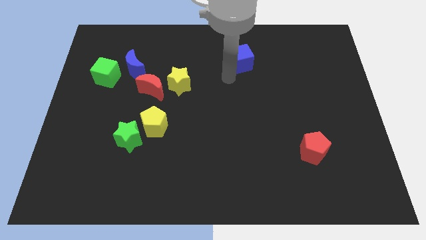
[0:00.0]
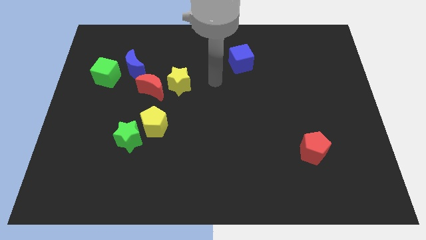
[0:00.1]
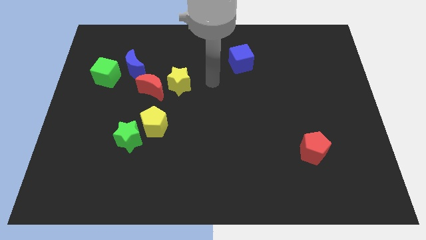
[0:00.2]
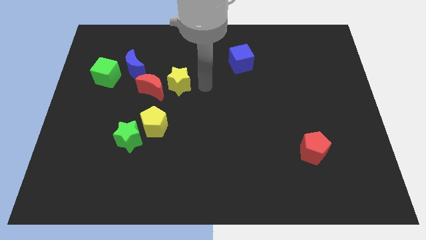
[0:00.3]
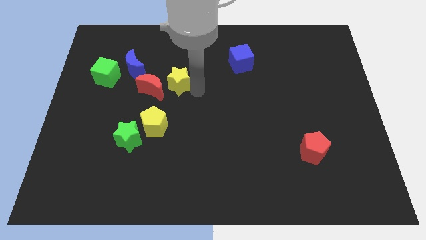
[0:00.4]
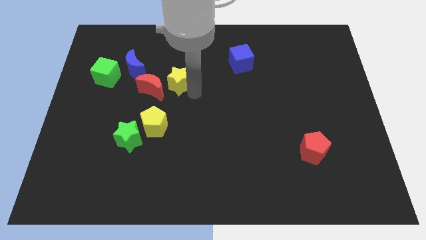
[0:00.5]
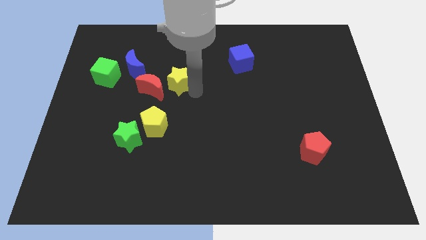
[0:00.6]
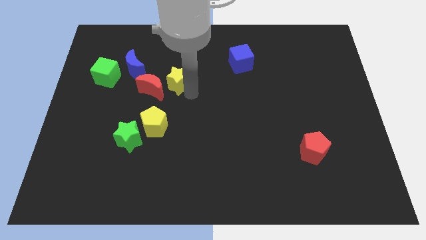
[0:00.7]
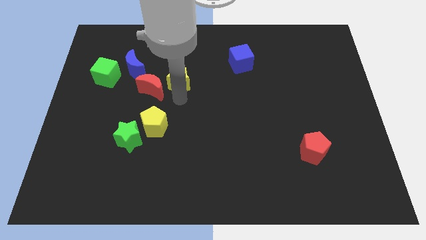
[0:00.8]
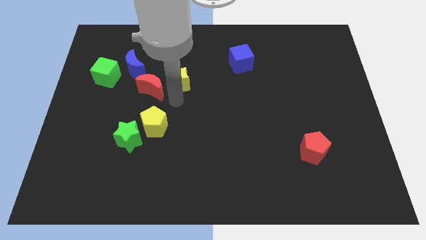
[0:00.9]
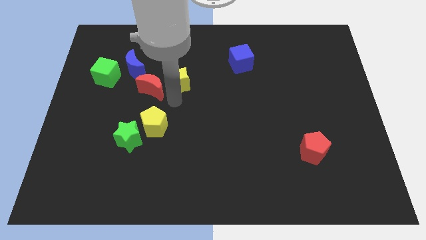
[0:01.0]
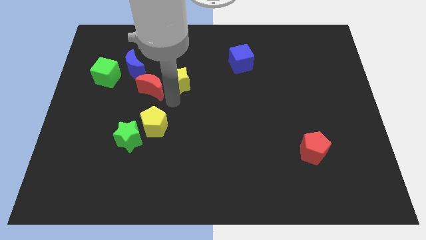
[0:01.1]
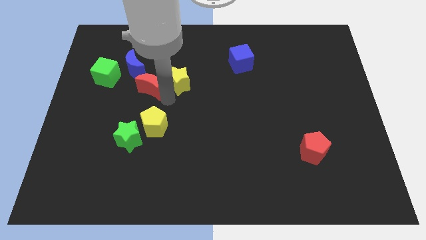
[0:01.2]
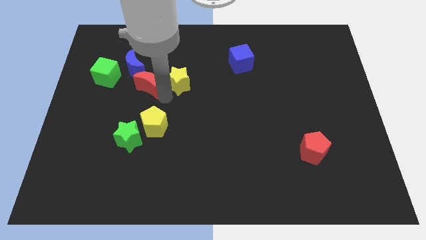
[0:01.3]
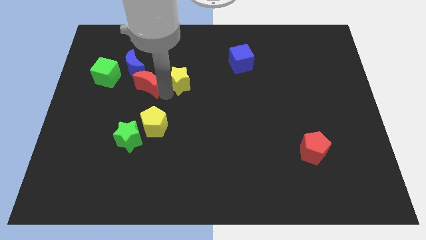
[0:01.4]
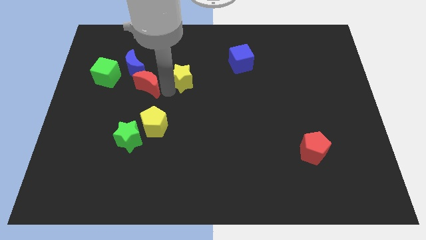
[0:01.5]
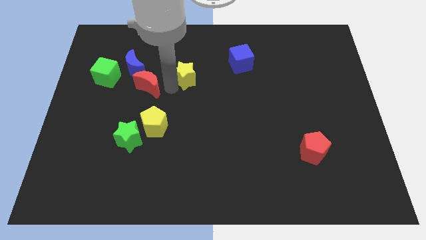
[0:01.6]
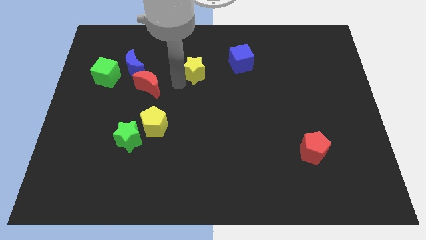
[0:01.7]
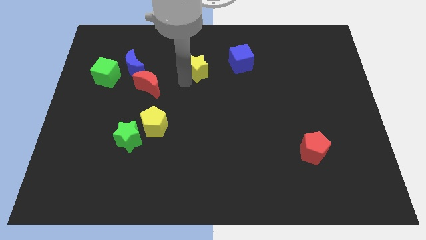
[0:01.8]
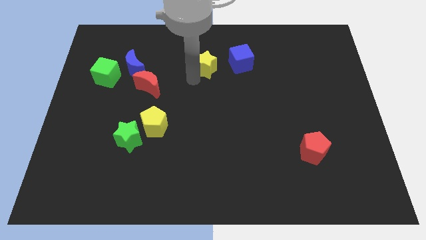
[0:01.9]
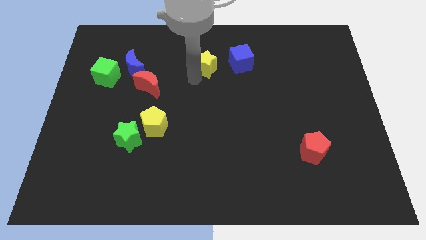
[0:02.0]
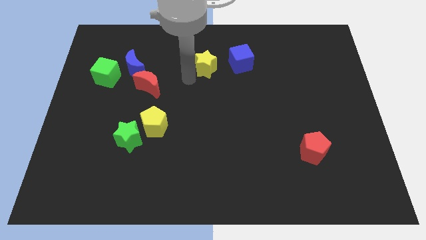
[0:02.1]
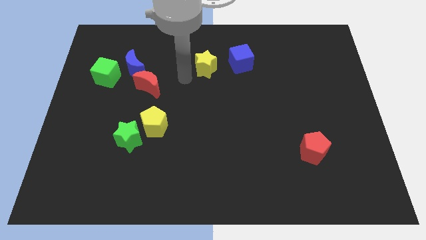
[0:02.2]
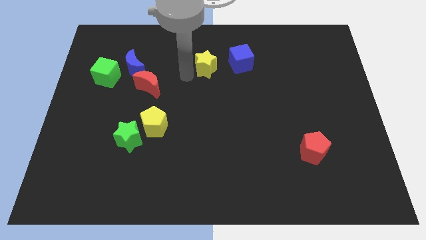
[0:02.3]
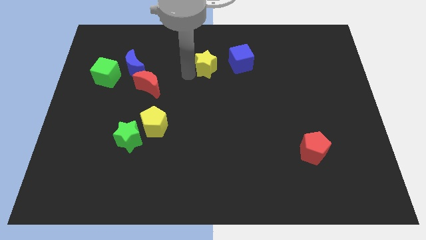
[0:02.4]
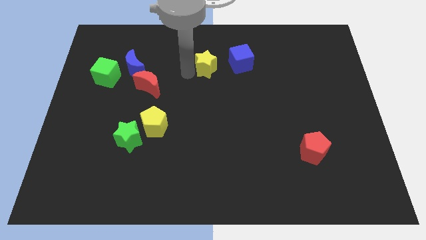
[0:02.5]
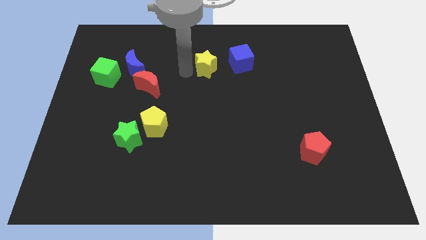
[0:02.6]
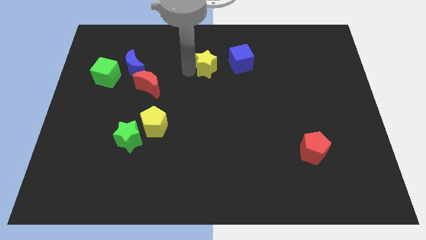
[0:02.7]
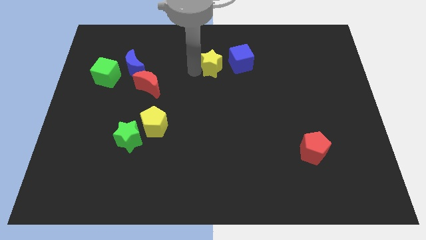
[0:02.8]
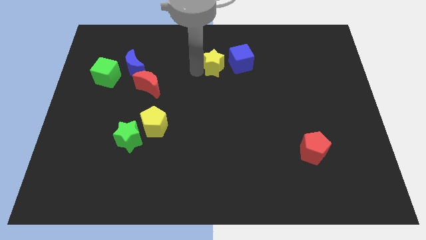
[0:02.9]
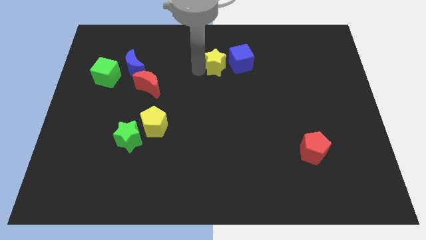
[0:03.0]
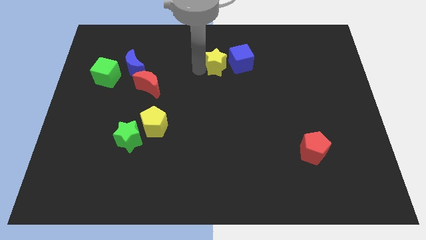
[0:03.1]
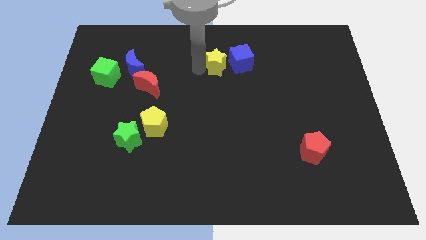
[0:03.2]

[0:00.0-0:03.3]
move the yellow star to the left of the blue cube

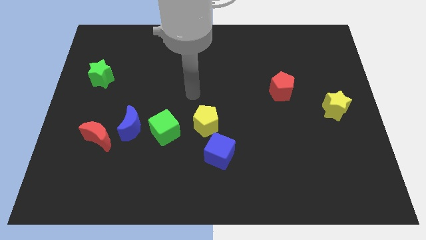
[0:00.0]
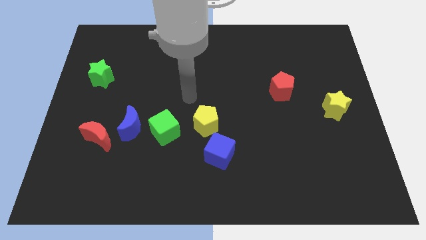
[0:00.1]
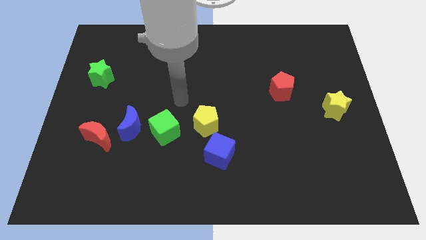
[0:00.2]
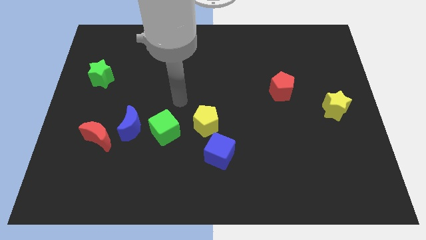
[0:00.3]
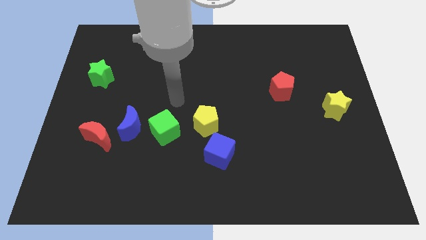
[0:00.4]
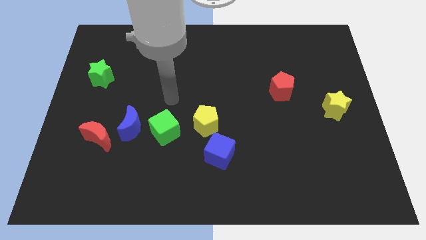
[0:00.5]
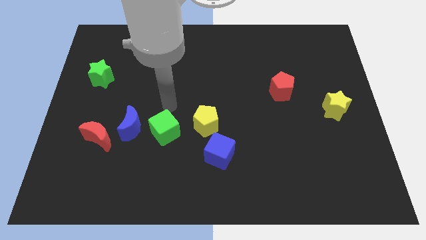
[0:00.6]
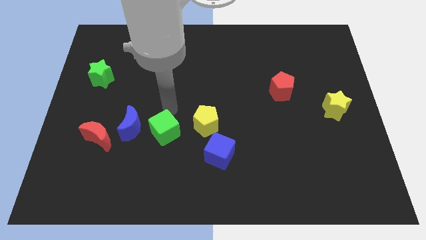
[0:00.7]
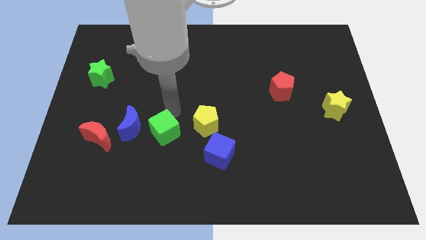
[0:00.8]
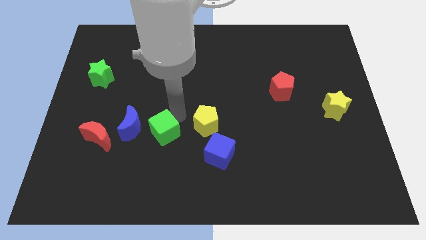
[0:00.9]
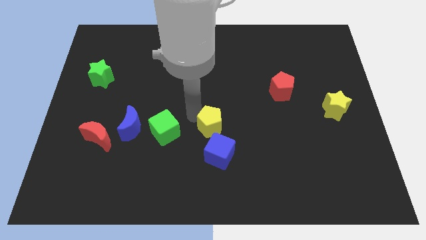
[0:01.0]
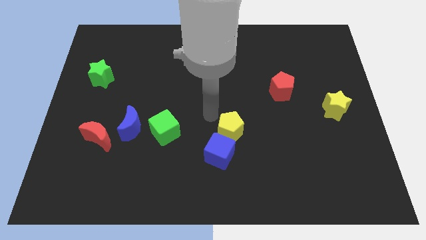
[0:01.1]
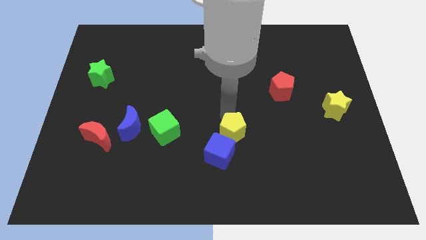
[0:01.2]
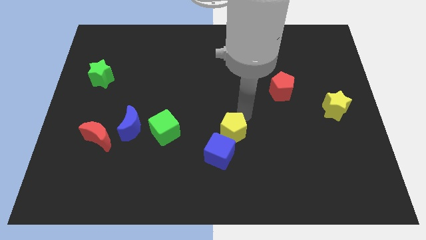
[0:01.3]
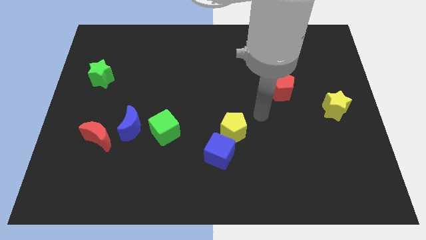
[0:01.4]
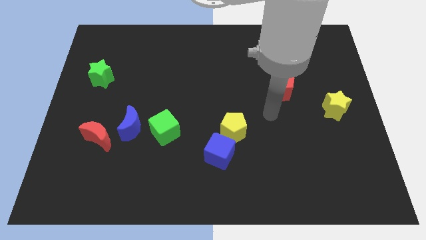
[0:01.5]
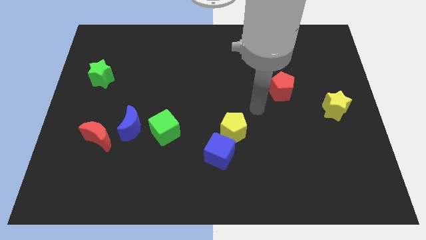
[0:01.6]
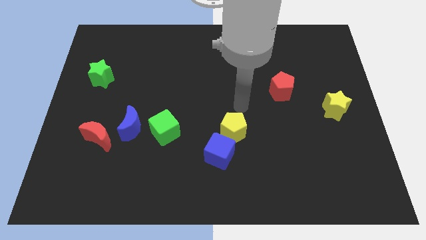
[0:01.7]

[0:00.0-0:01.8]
move the yellow pentagon slightly to the right

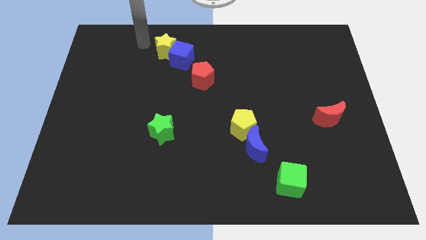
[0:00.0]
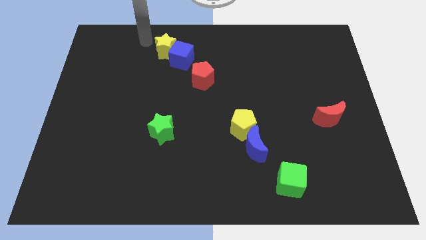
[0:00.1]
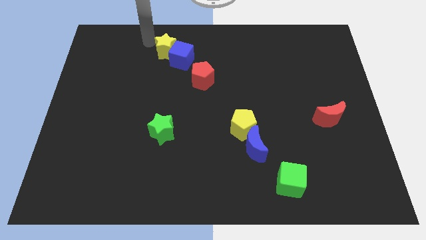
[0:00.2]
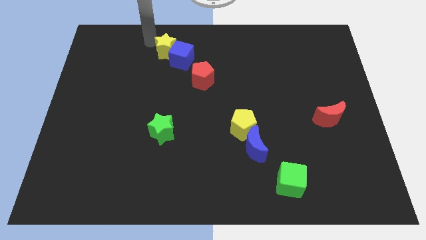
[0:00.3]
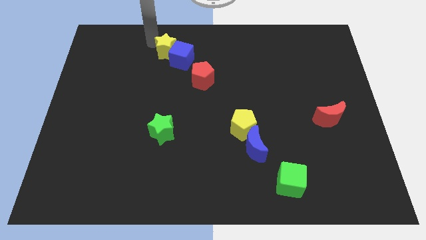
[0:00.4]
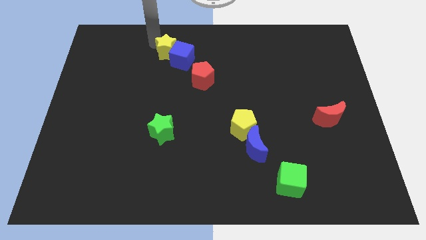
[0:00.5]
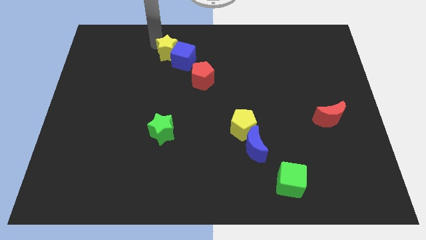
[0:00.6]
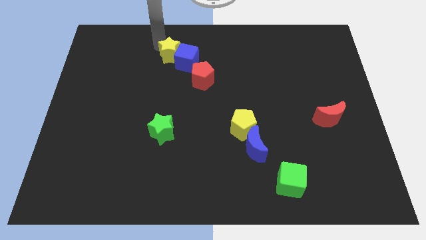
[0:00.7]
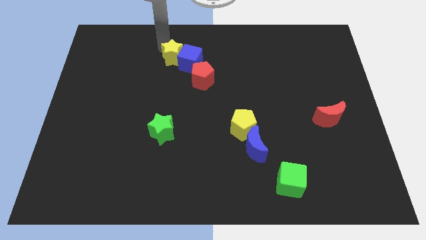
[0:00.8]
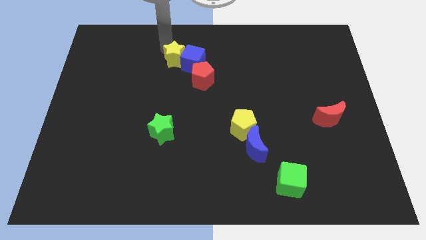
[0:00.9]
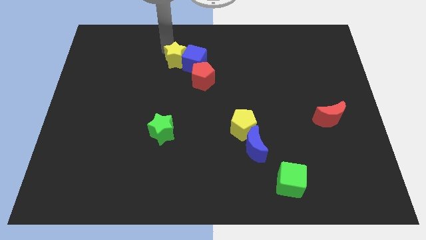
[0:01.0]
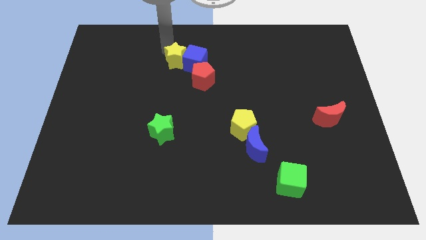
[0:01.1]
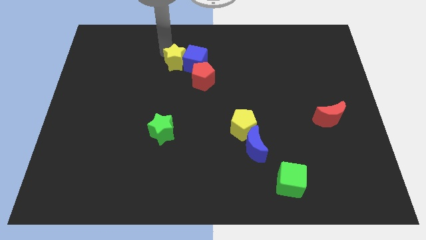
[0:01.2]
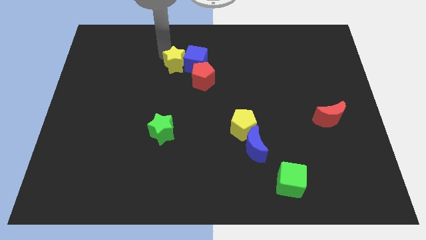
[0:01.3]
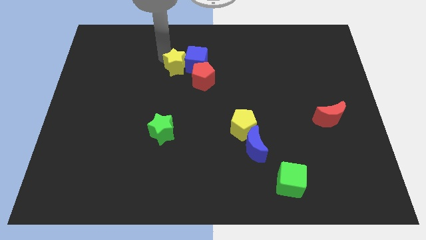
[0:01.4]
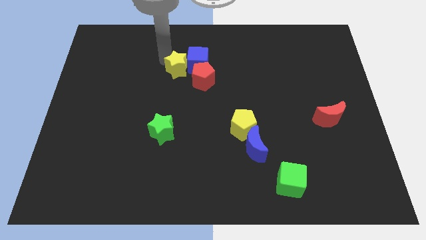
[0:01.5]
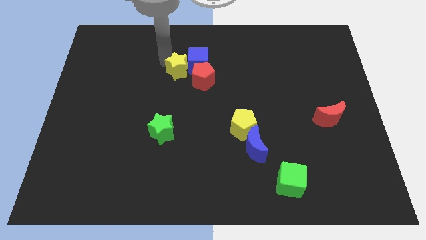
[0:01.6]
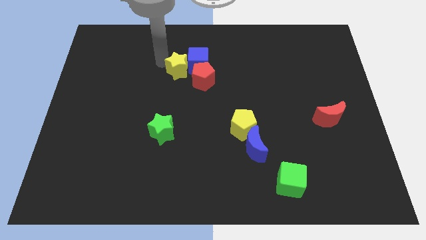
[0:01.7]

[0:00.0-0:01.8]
push the yellow star and blue cube into the red pentagon

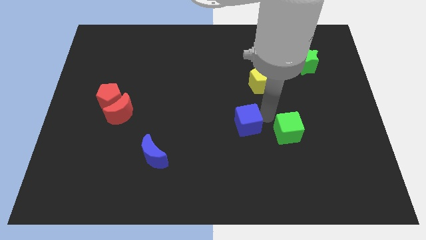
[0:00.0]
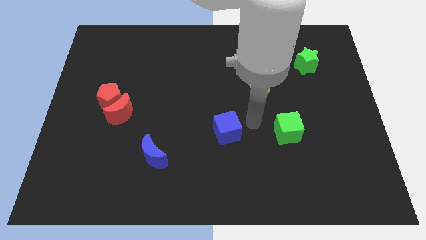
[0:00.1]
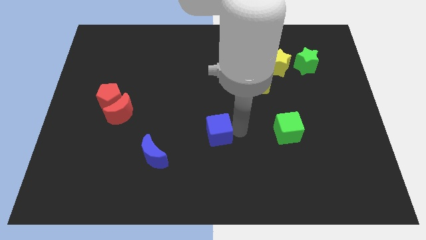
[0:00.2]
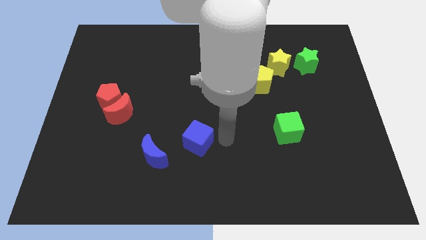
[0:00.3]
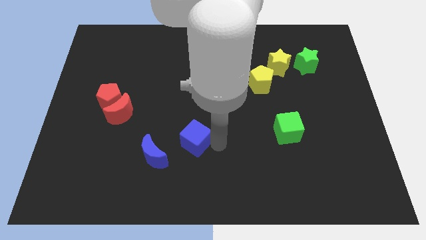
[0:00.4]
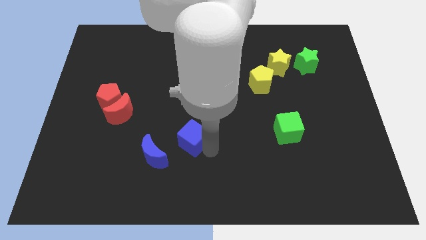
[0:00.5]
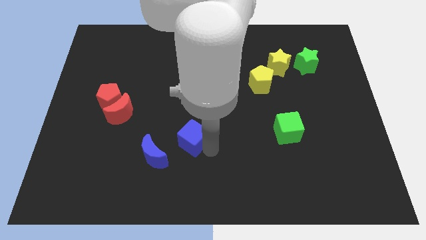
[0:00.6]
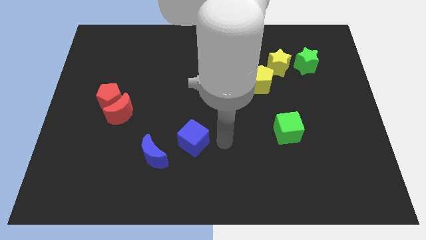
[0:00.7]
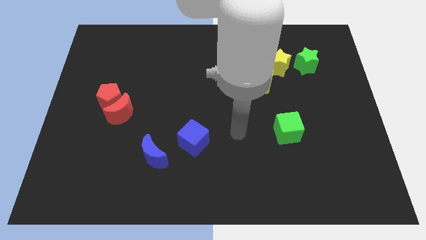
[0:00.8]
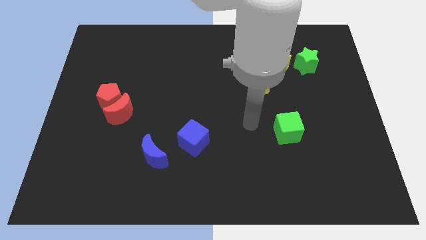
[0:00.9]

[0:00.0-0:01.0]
move the blue cube to the right of the blue crescent

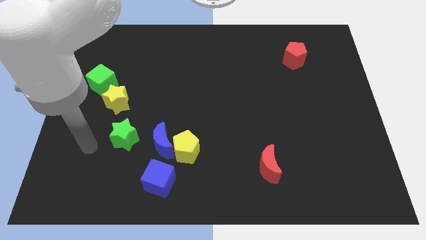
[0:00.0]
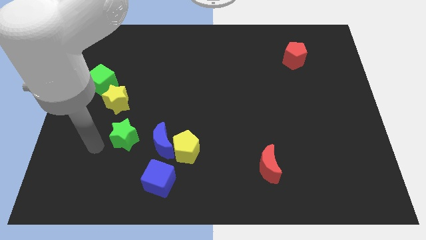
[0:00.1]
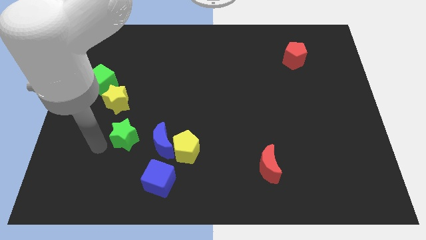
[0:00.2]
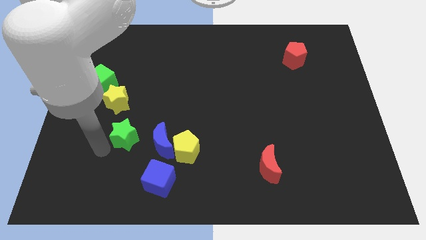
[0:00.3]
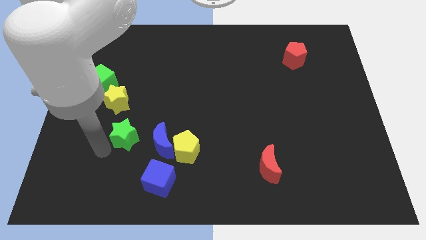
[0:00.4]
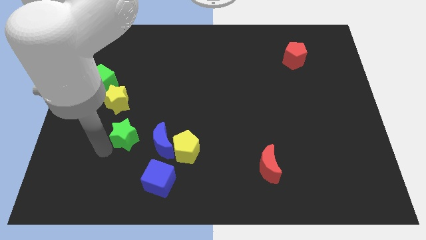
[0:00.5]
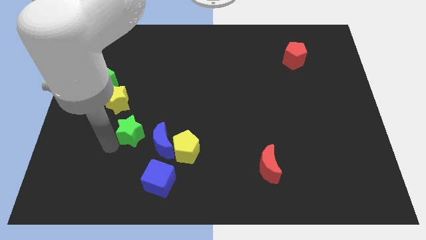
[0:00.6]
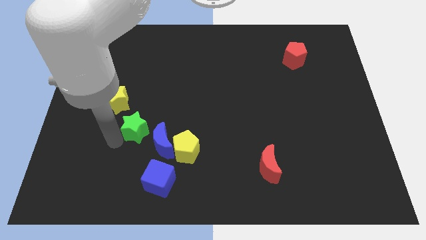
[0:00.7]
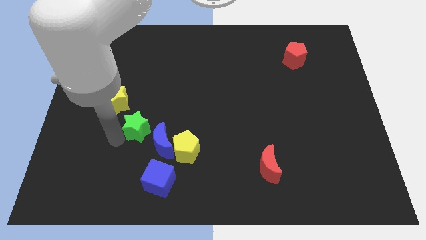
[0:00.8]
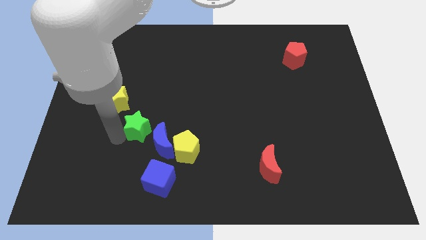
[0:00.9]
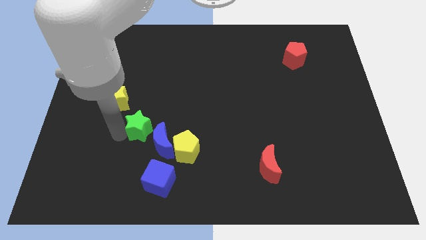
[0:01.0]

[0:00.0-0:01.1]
place green star in between yellow star and blue moon
